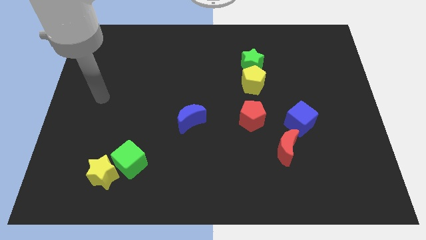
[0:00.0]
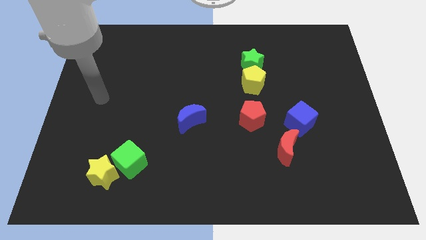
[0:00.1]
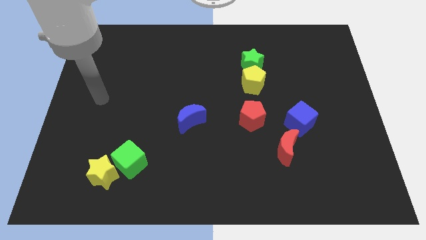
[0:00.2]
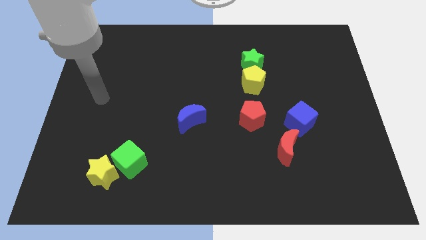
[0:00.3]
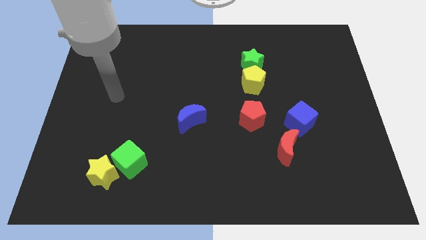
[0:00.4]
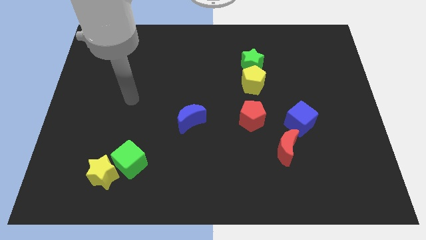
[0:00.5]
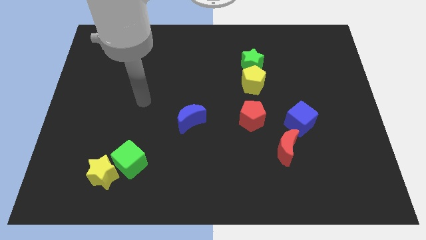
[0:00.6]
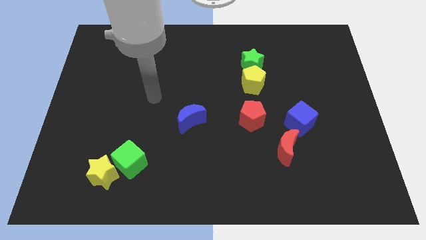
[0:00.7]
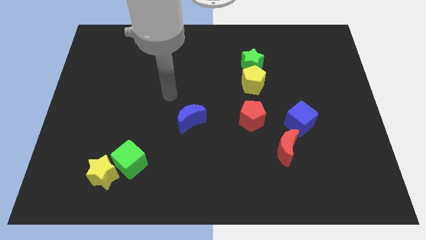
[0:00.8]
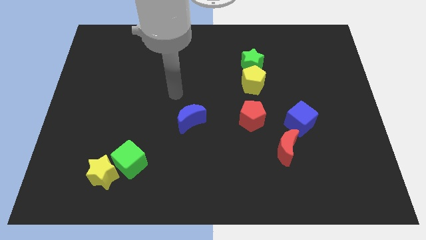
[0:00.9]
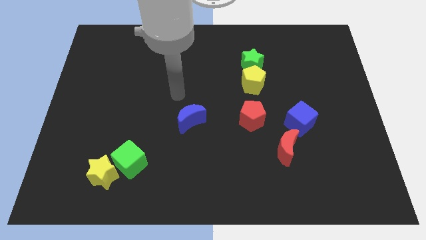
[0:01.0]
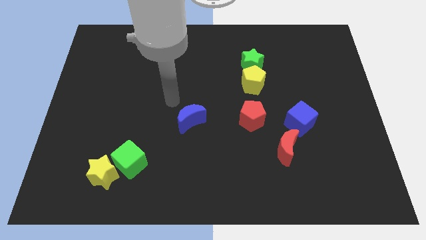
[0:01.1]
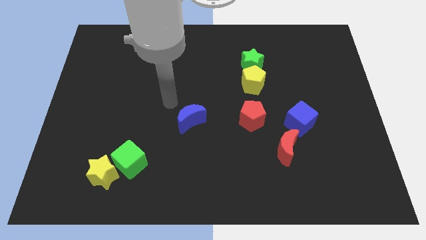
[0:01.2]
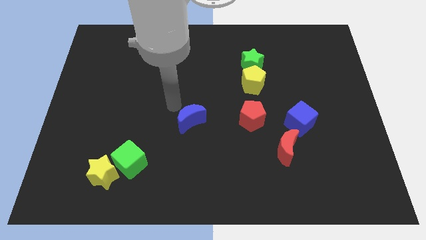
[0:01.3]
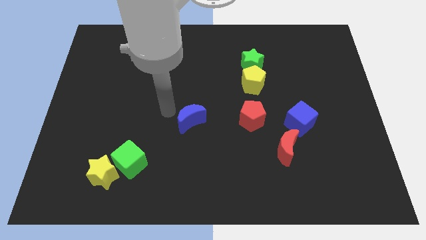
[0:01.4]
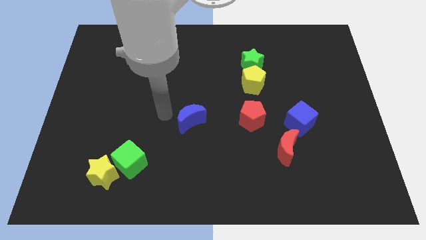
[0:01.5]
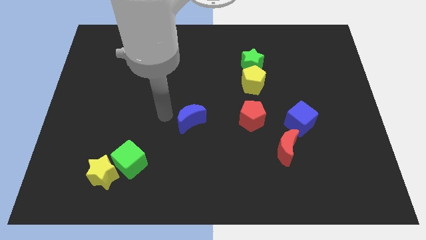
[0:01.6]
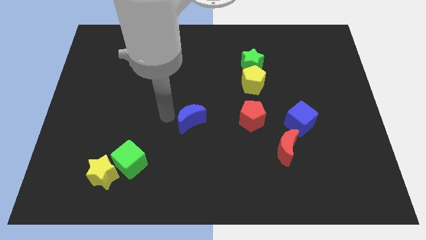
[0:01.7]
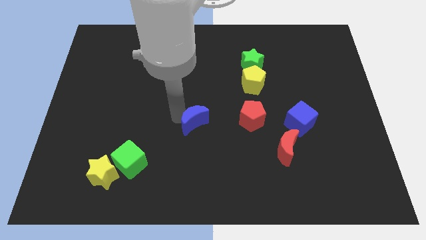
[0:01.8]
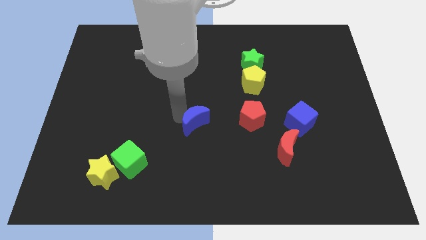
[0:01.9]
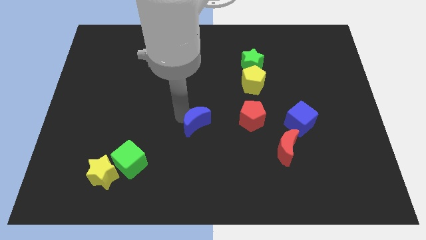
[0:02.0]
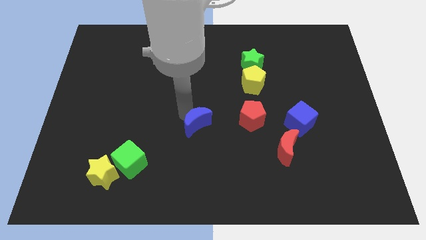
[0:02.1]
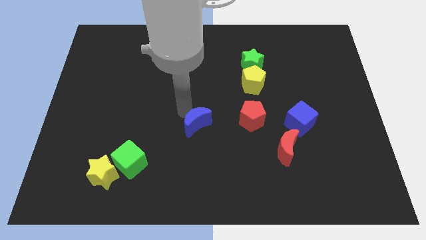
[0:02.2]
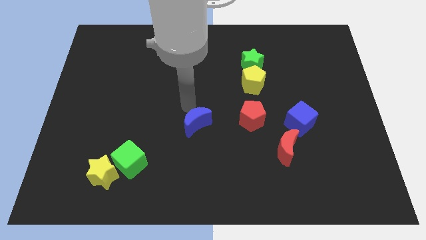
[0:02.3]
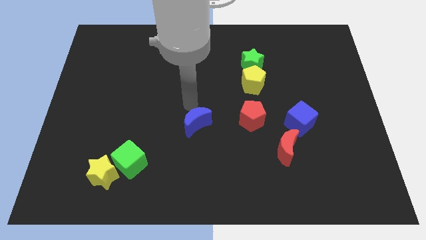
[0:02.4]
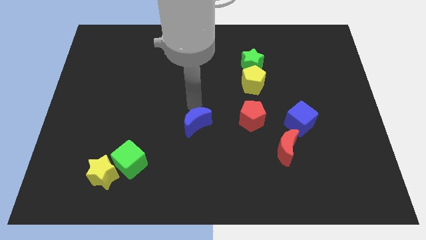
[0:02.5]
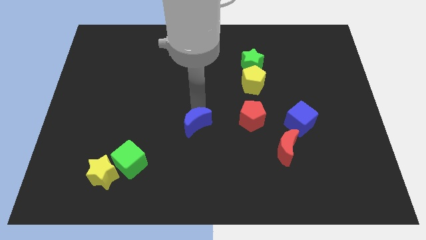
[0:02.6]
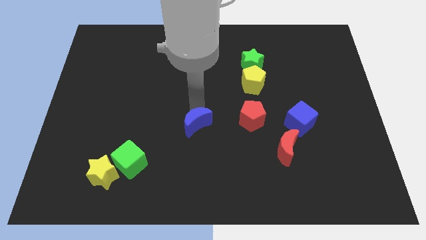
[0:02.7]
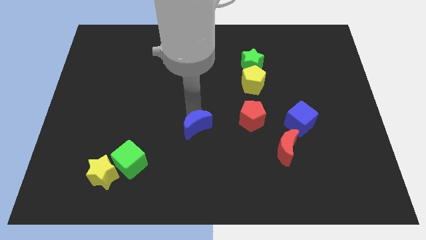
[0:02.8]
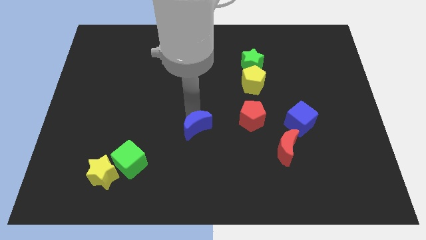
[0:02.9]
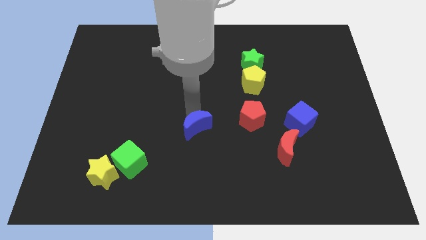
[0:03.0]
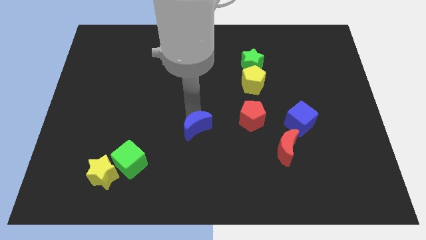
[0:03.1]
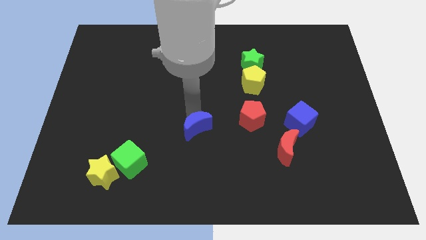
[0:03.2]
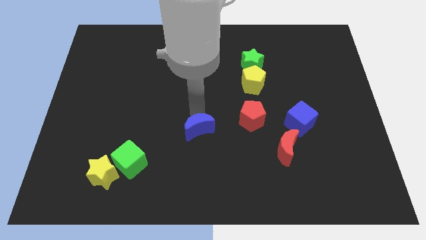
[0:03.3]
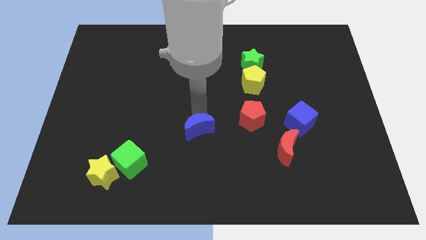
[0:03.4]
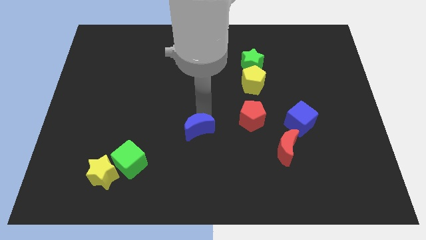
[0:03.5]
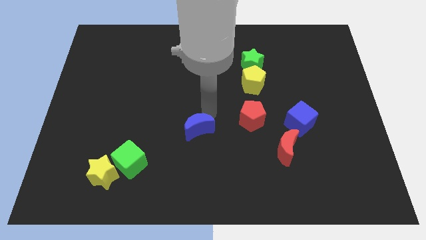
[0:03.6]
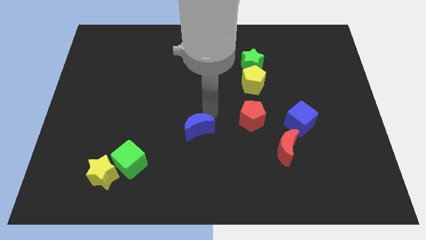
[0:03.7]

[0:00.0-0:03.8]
move the blue crescent slightly to the bottom

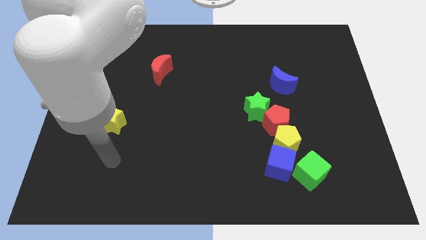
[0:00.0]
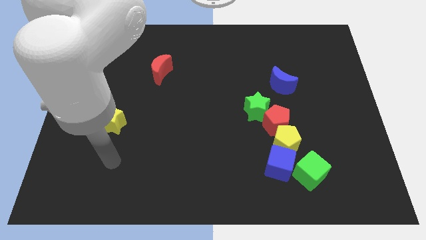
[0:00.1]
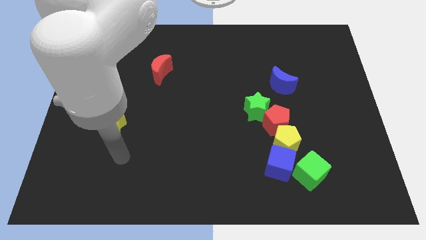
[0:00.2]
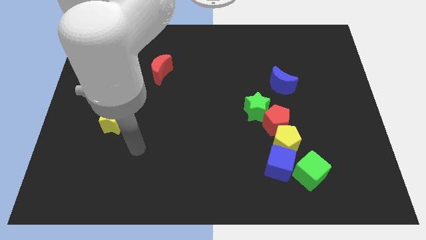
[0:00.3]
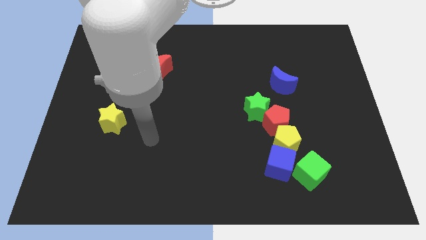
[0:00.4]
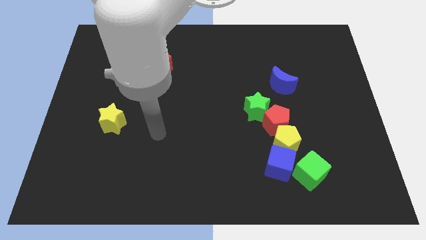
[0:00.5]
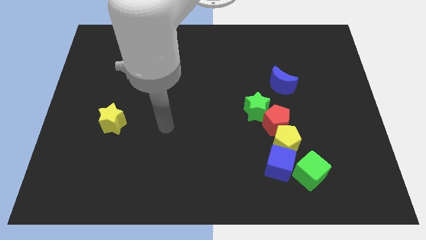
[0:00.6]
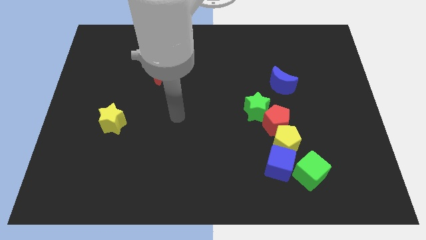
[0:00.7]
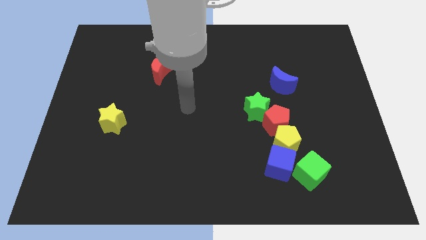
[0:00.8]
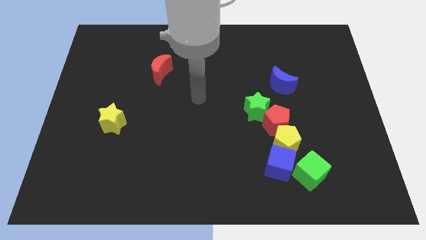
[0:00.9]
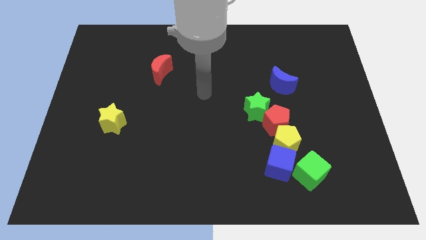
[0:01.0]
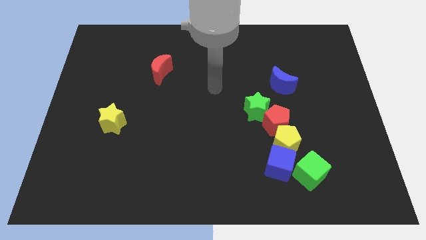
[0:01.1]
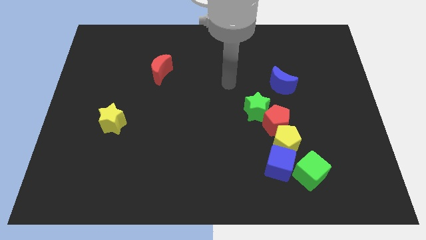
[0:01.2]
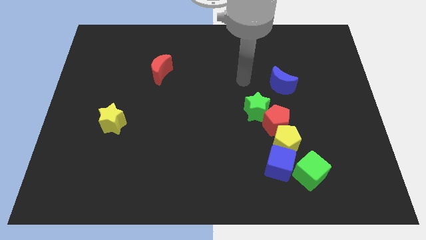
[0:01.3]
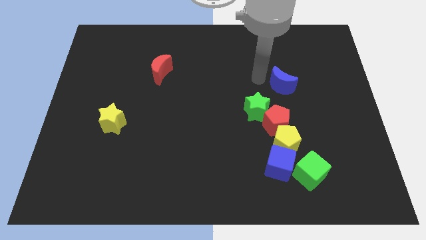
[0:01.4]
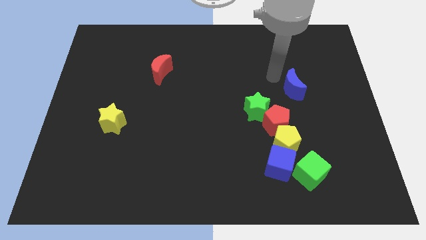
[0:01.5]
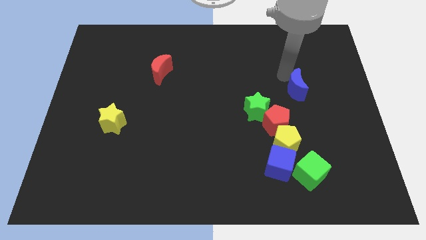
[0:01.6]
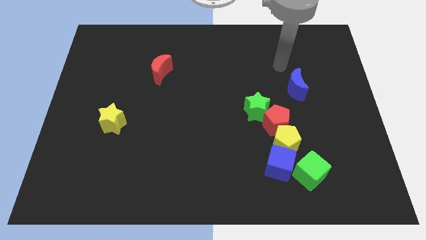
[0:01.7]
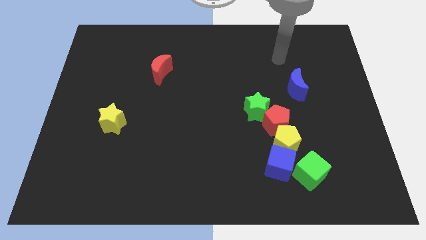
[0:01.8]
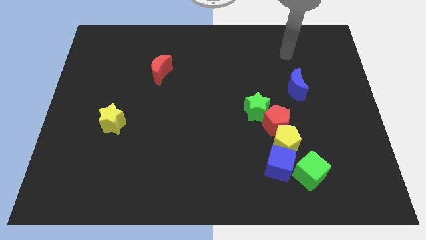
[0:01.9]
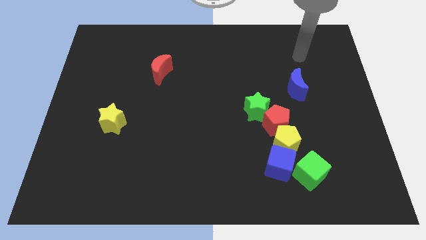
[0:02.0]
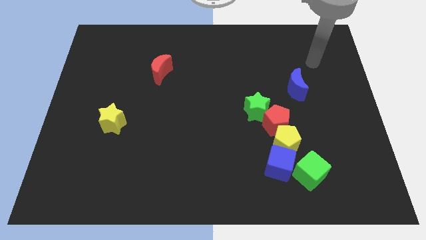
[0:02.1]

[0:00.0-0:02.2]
move arm towards the top right

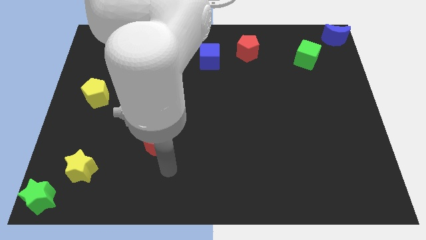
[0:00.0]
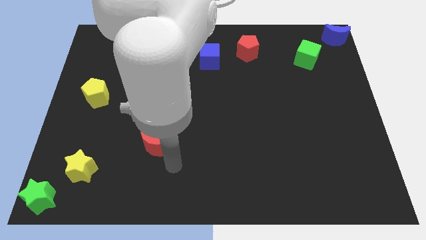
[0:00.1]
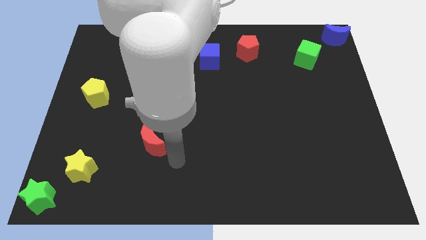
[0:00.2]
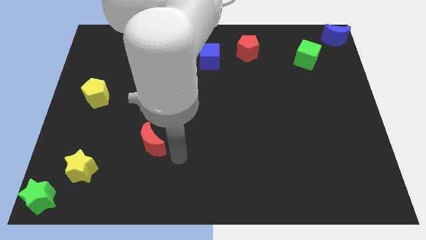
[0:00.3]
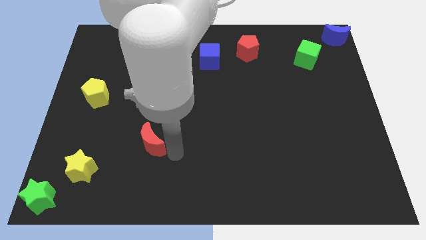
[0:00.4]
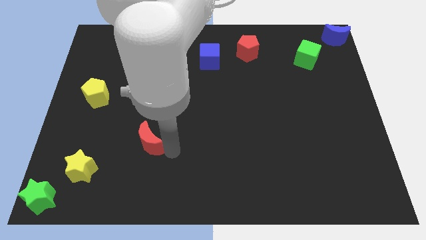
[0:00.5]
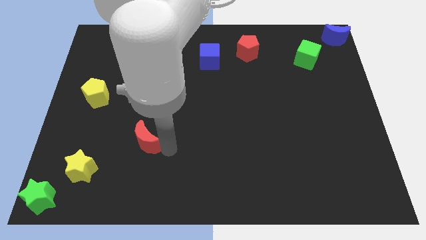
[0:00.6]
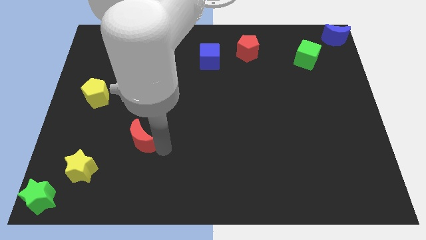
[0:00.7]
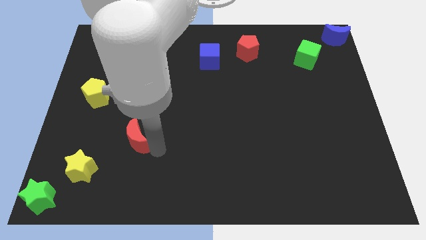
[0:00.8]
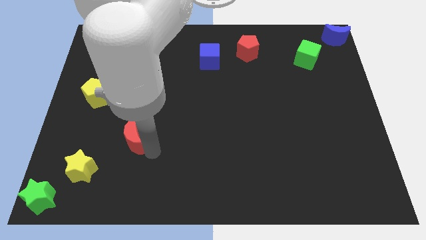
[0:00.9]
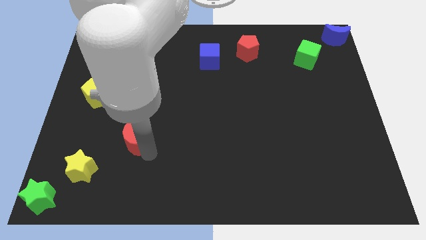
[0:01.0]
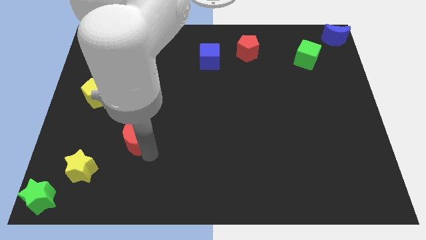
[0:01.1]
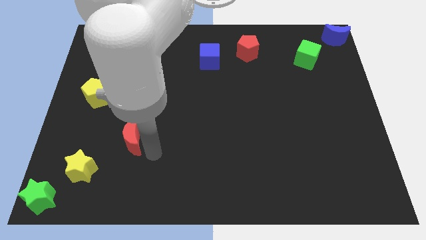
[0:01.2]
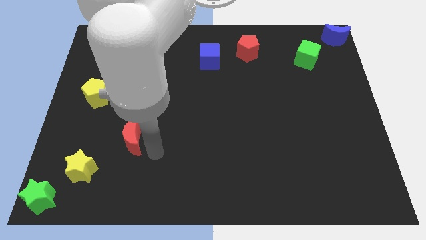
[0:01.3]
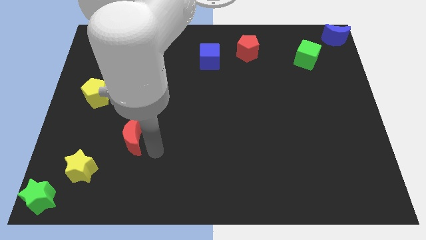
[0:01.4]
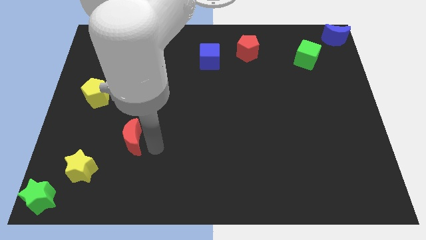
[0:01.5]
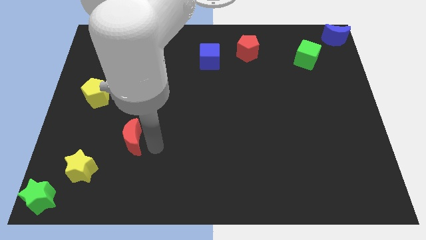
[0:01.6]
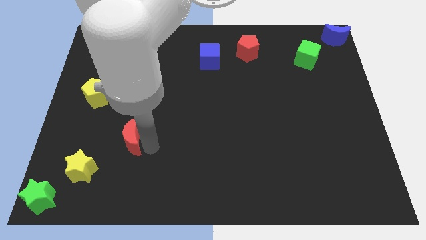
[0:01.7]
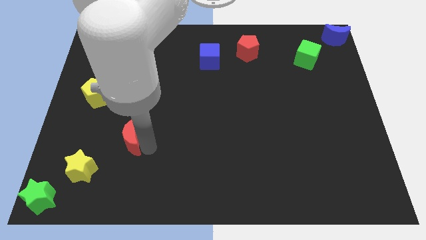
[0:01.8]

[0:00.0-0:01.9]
place the red moon diagonally to the yellow star and green star

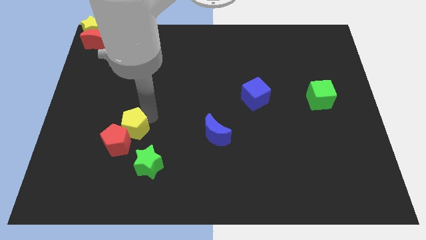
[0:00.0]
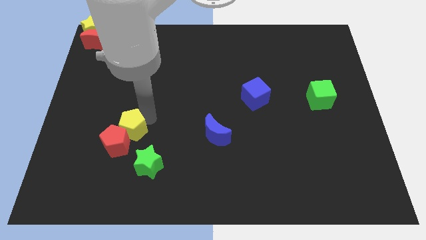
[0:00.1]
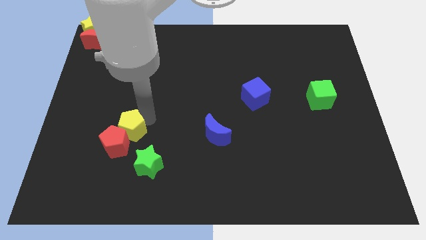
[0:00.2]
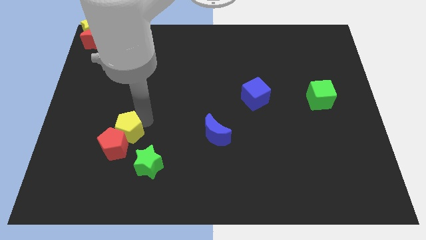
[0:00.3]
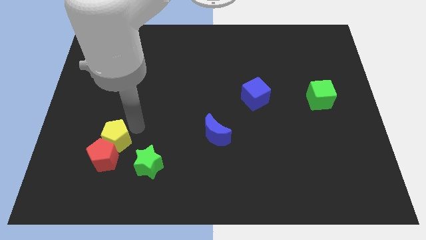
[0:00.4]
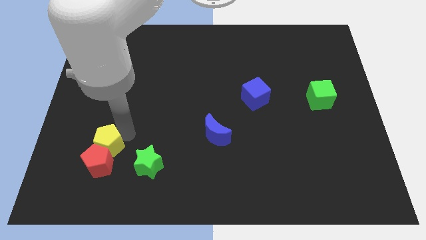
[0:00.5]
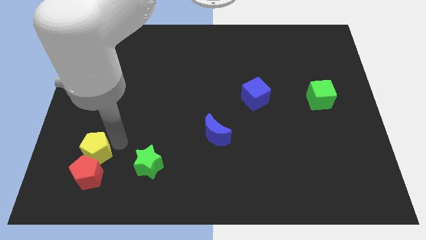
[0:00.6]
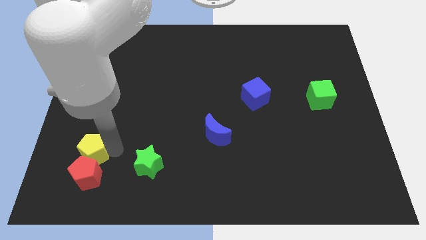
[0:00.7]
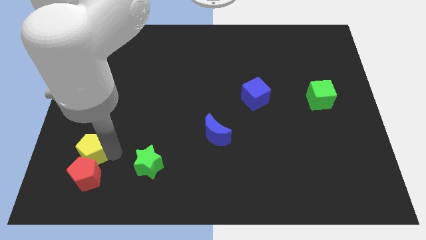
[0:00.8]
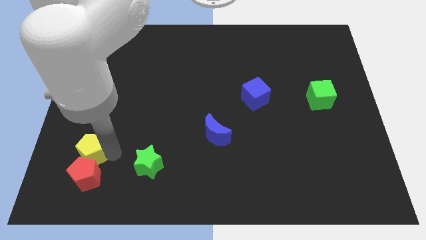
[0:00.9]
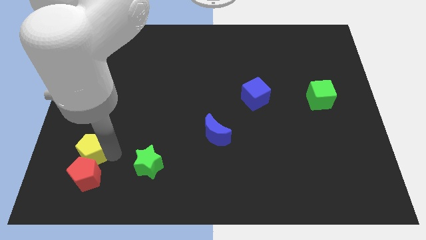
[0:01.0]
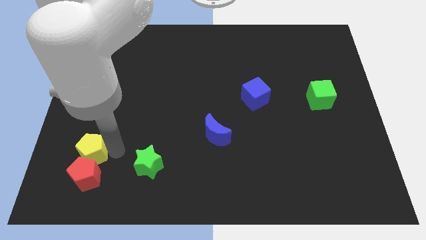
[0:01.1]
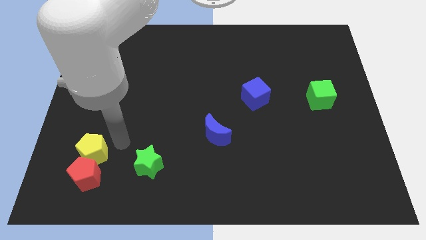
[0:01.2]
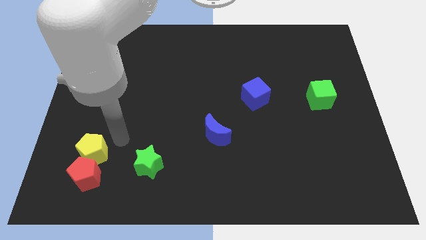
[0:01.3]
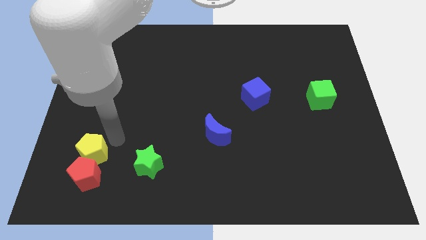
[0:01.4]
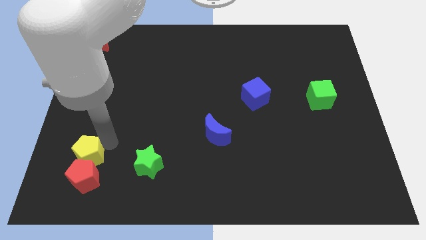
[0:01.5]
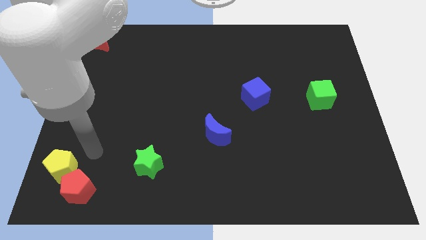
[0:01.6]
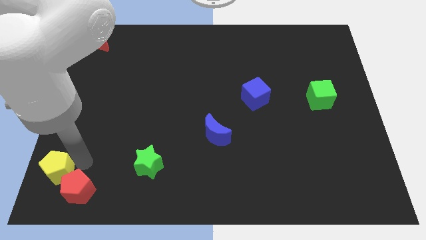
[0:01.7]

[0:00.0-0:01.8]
drag the yellow pentagon and the red pentagon towards the bottom left
